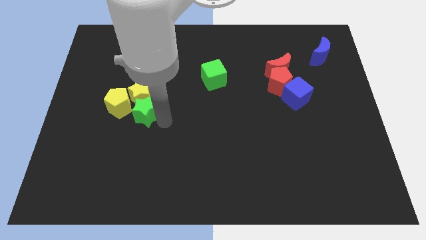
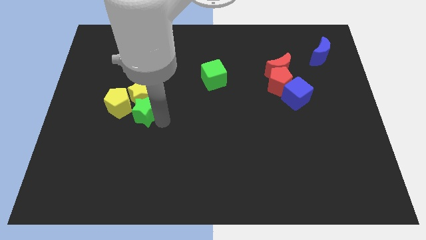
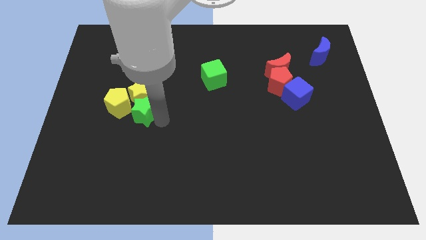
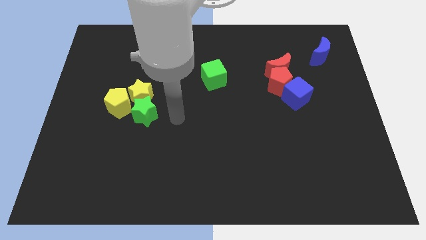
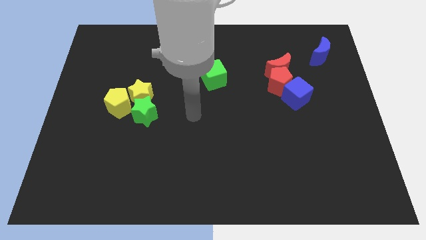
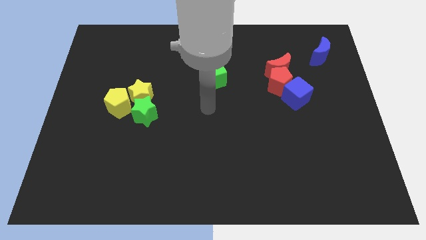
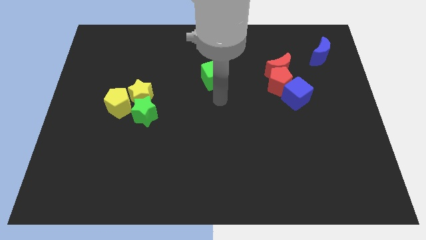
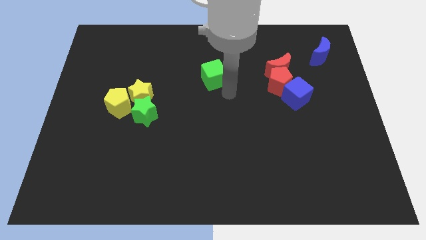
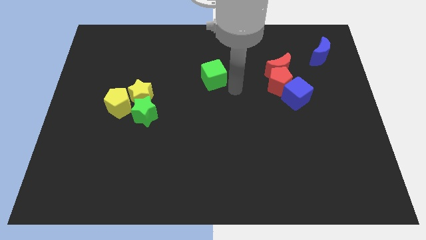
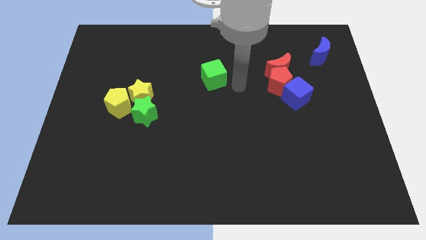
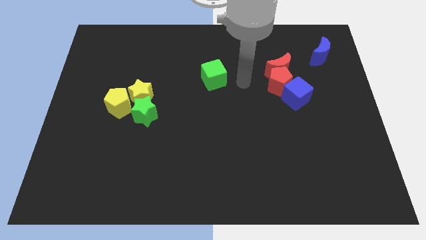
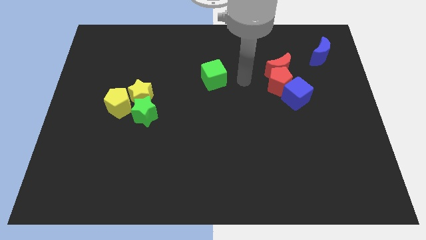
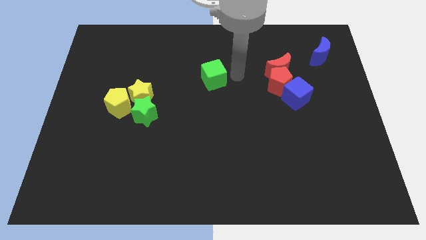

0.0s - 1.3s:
place your arm in between red moon and green cube

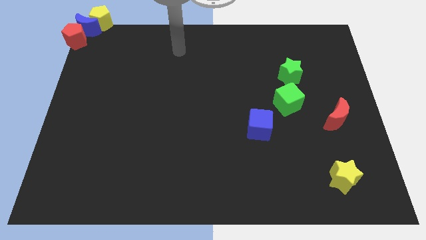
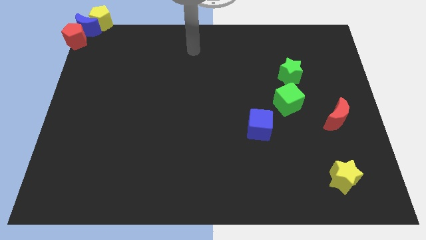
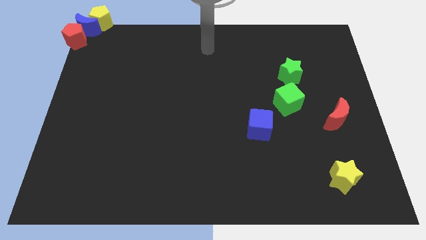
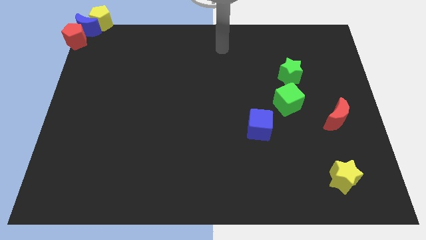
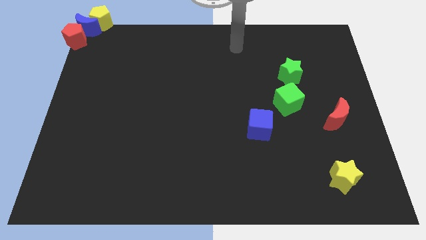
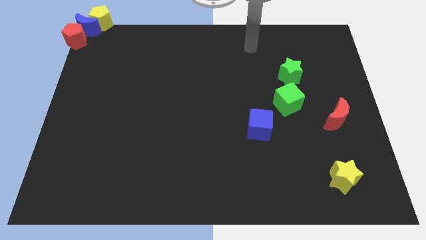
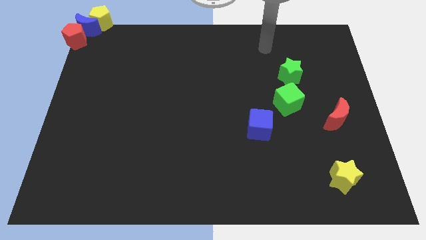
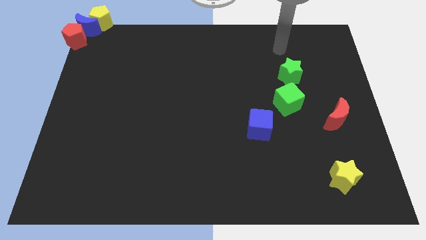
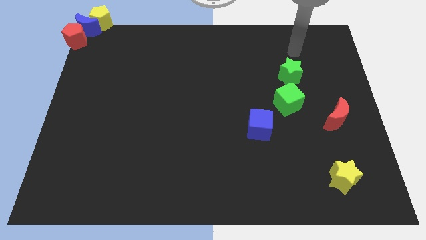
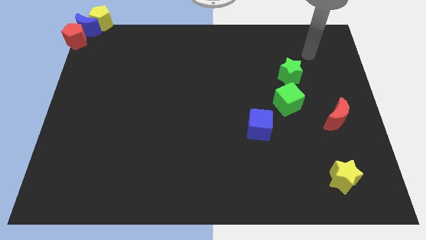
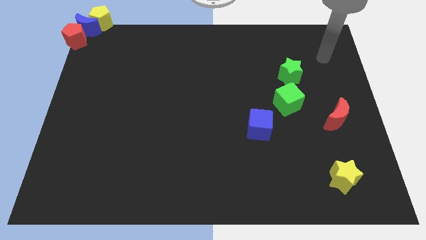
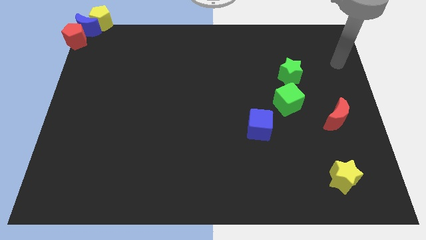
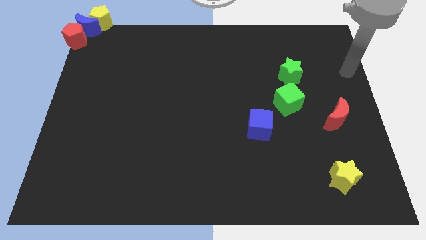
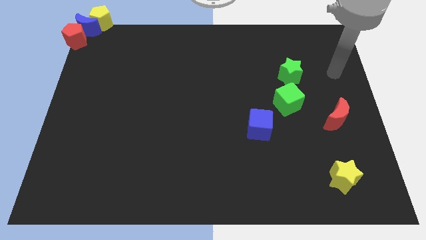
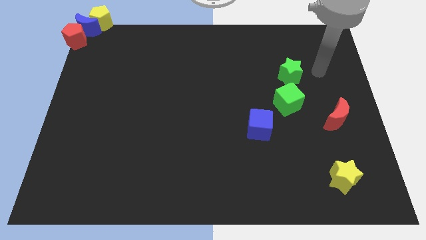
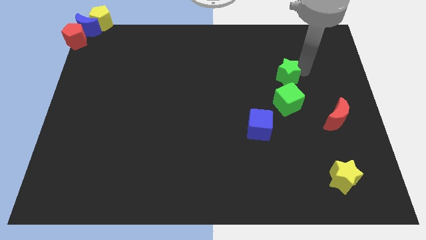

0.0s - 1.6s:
tap the green star

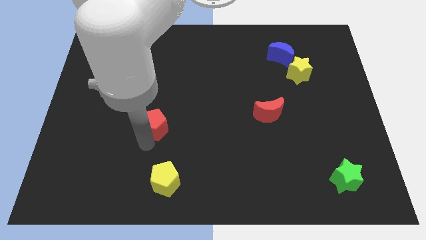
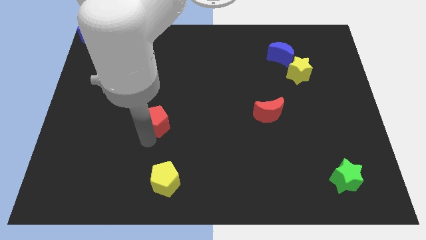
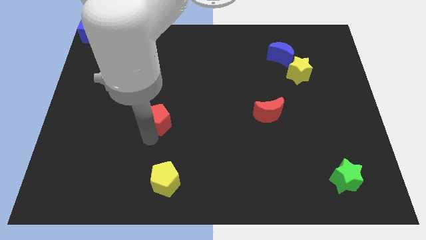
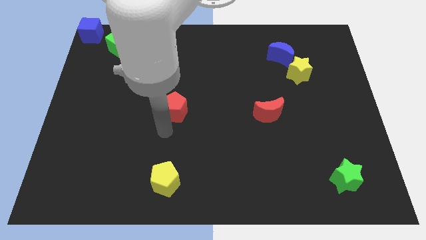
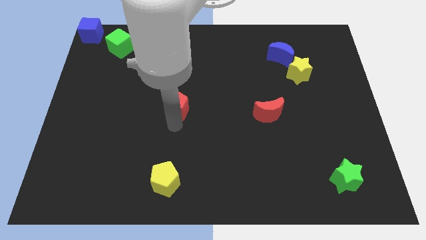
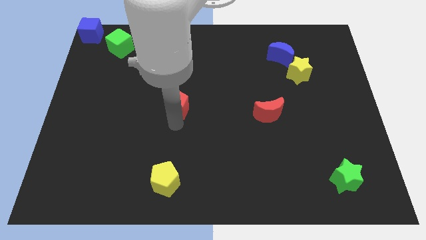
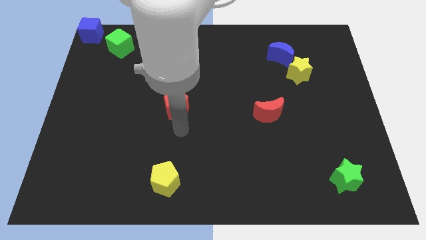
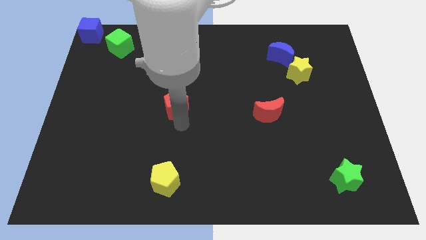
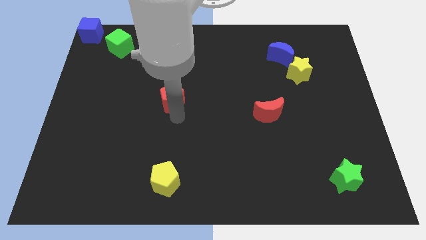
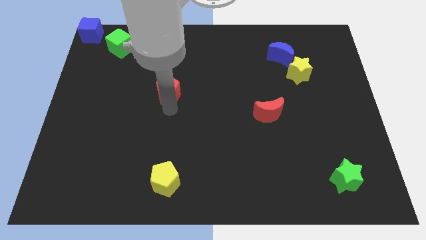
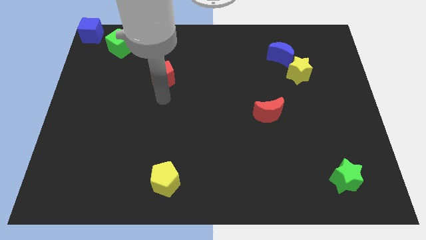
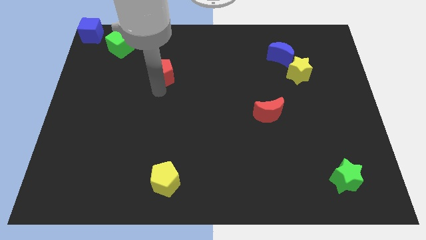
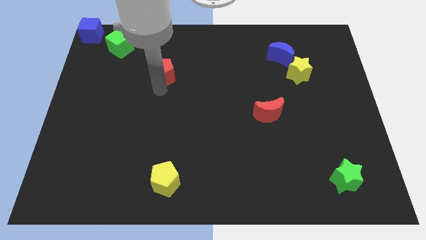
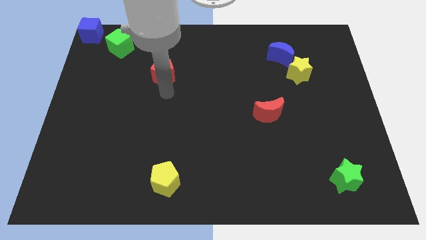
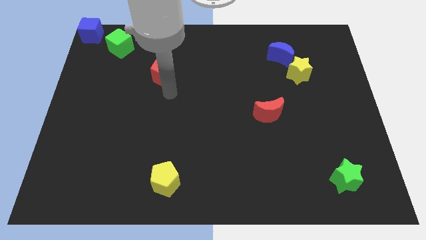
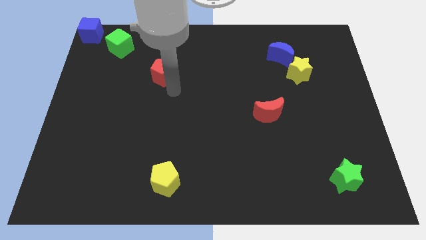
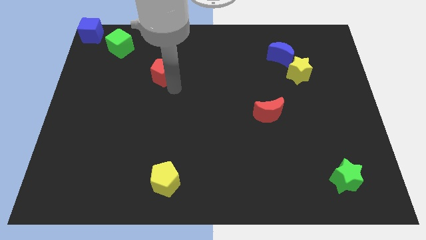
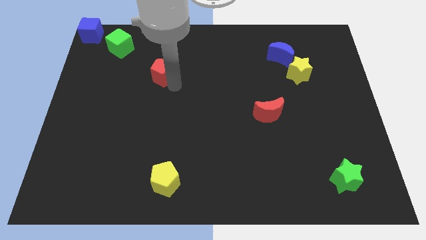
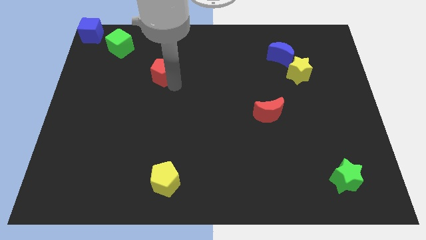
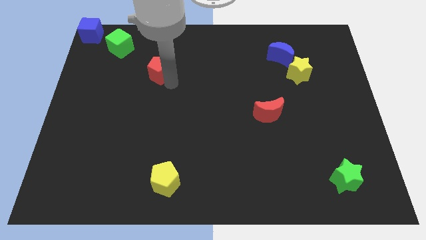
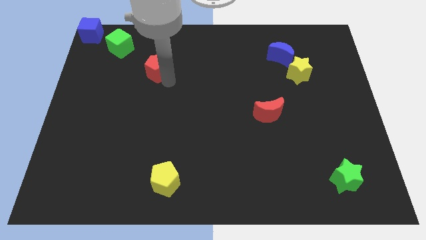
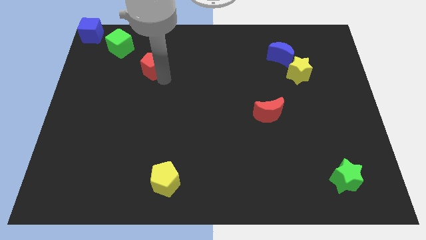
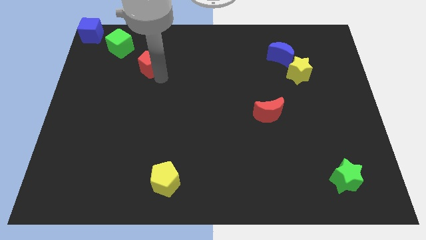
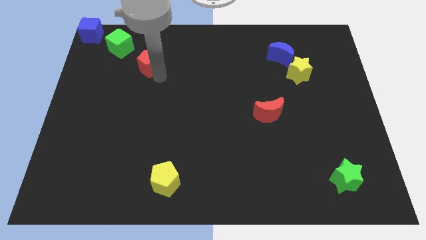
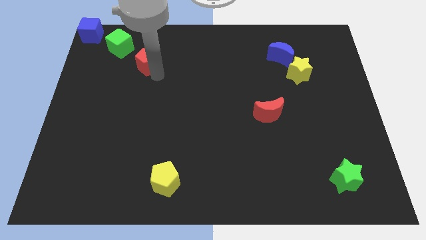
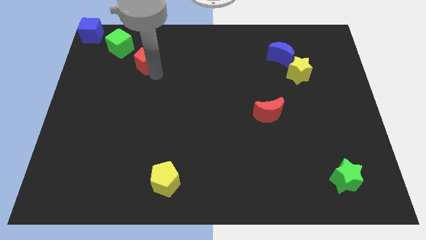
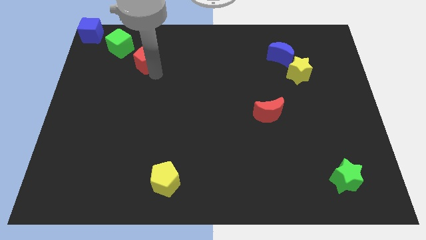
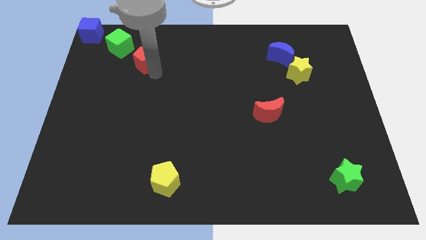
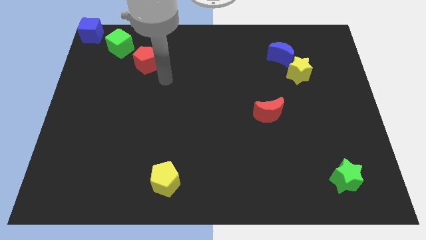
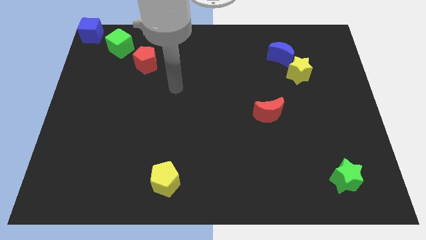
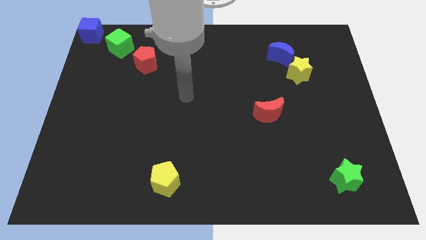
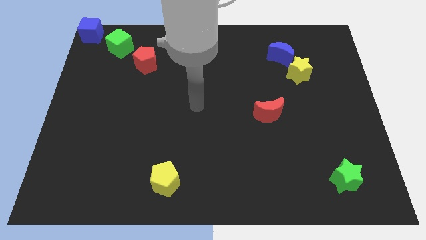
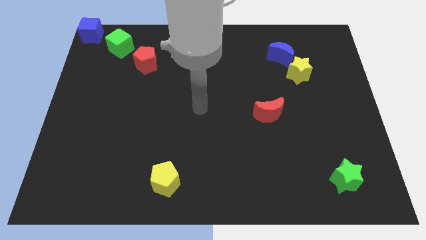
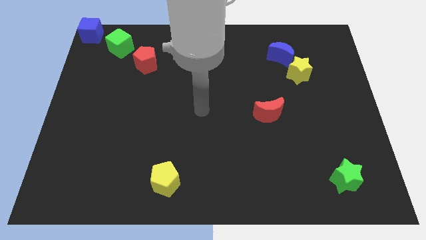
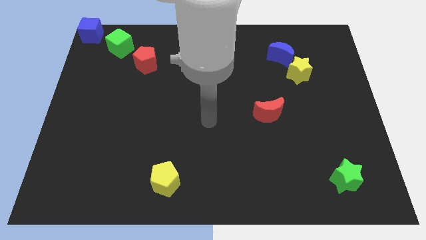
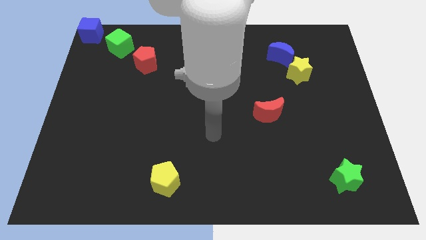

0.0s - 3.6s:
place the red pentagon to the bottom right of the green cube

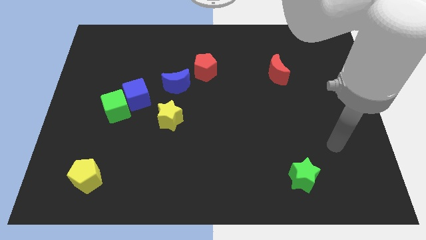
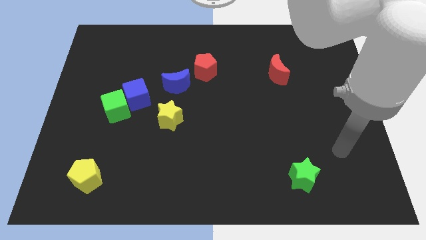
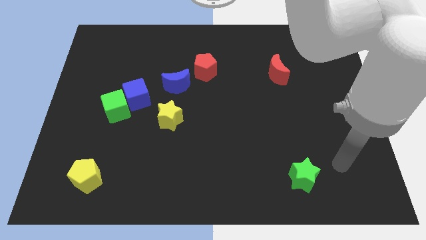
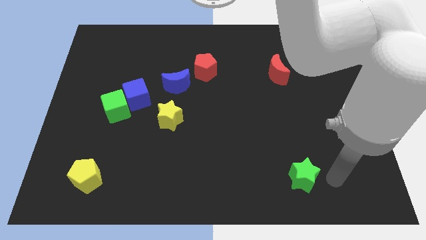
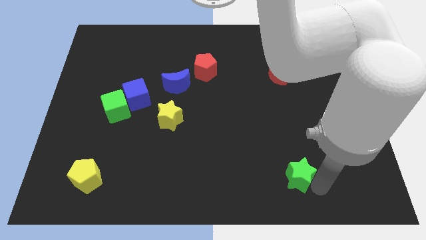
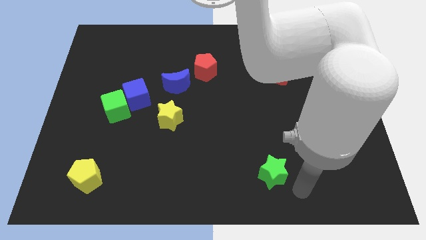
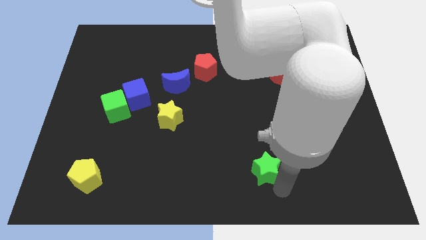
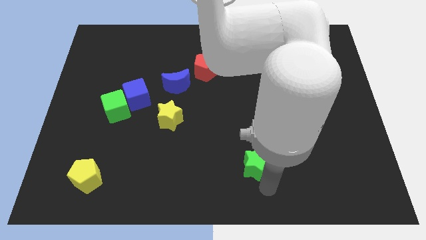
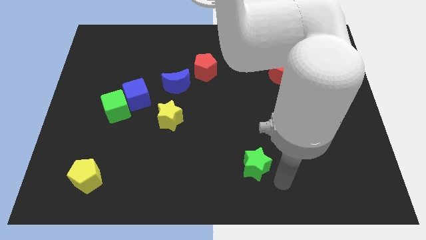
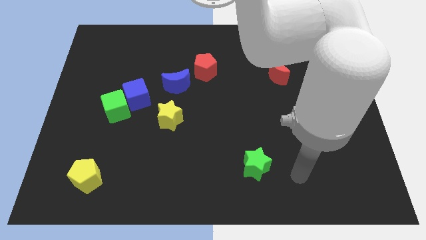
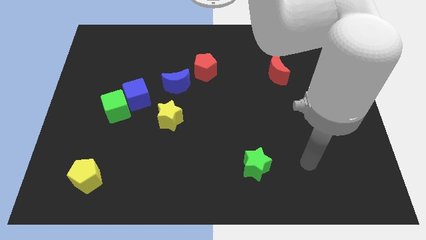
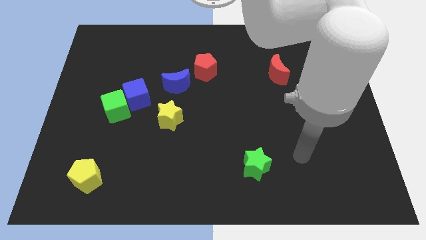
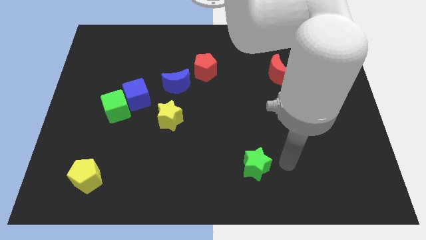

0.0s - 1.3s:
push the green star to the left

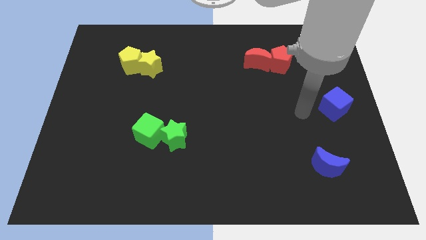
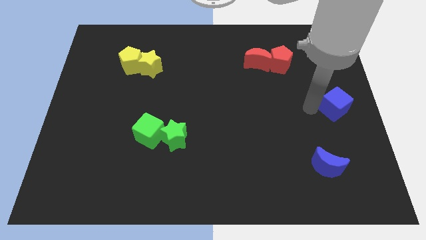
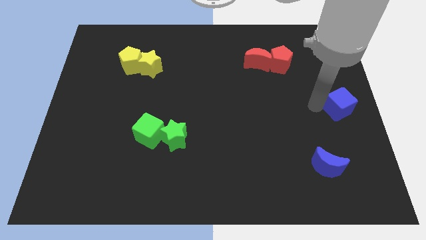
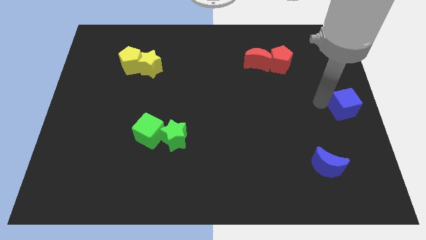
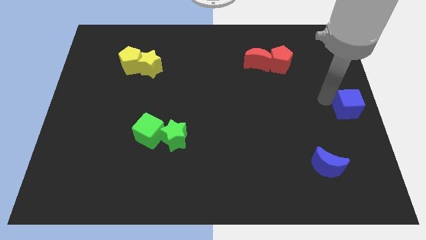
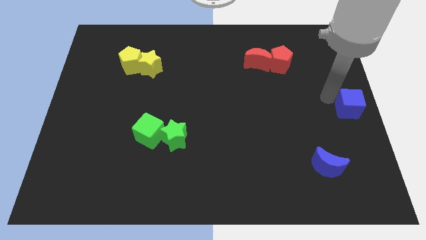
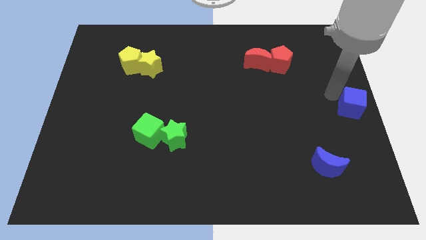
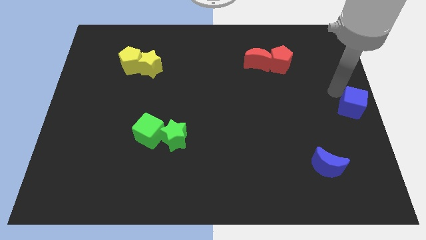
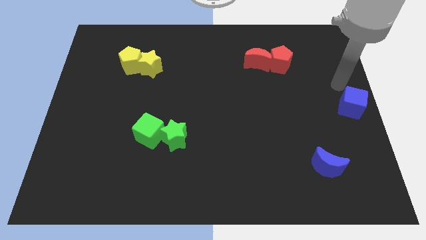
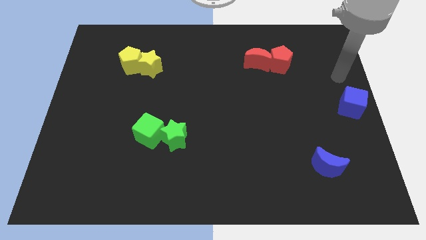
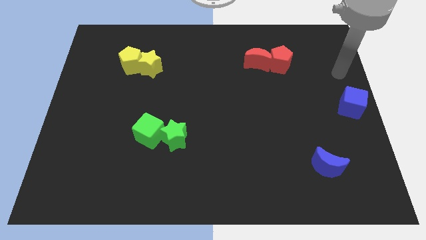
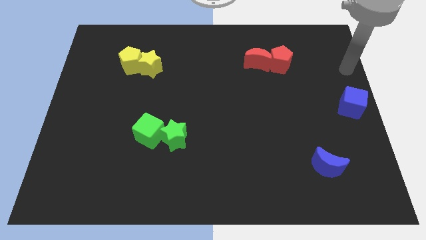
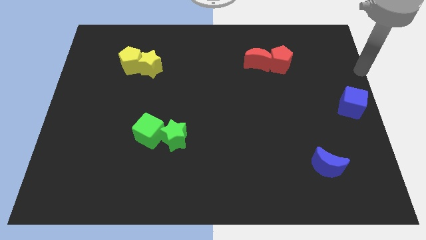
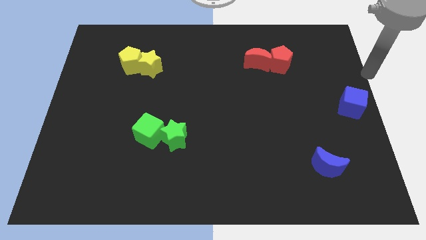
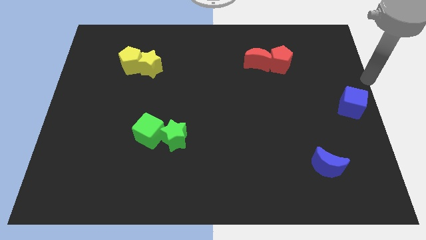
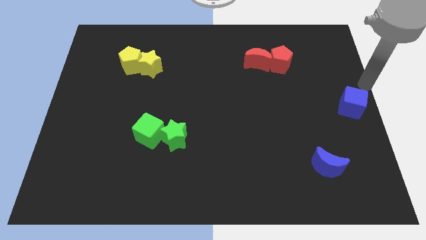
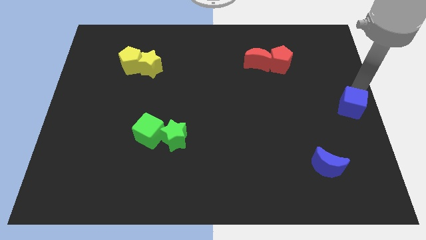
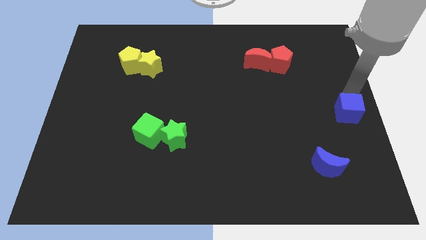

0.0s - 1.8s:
push blue block to right center of the board
